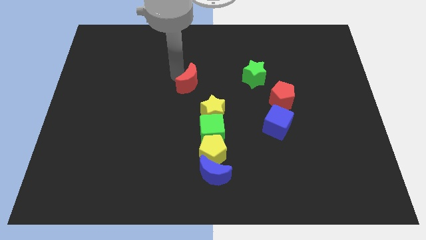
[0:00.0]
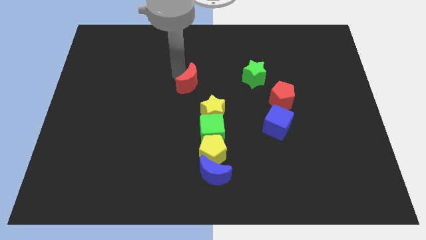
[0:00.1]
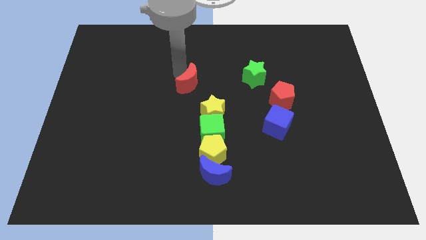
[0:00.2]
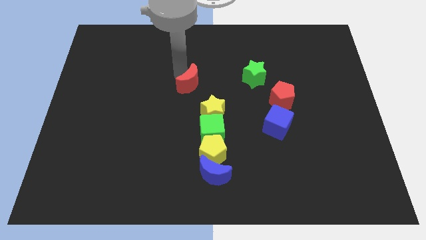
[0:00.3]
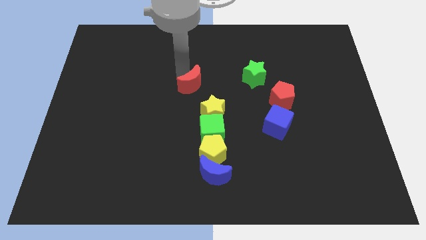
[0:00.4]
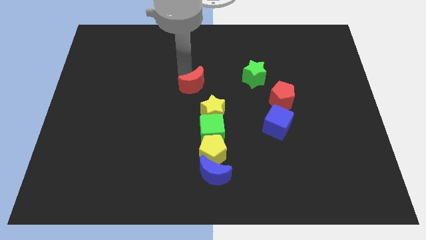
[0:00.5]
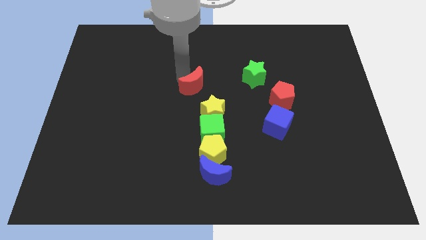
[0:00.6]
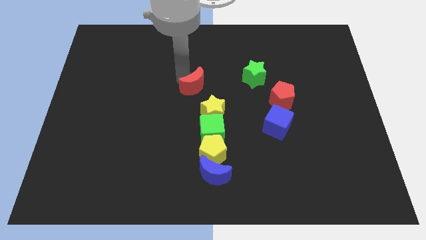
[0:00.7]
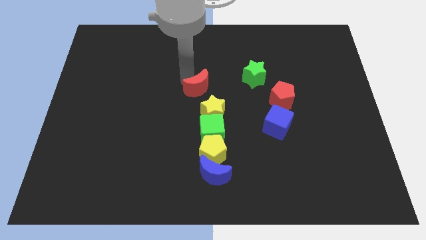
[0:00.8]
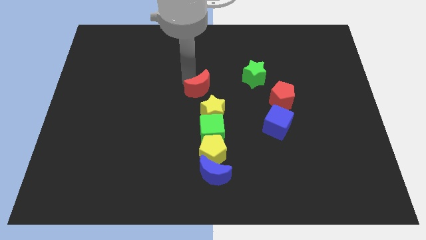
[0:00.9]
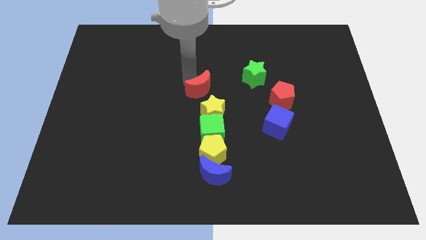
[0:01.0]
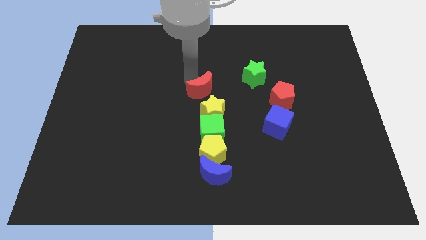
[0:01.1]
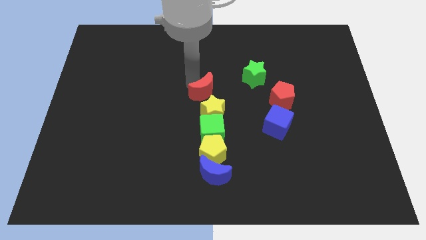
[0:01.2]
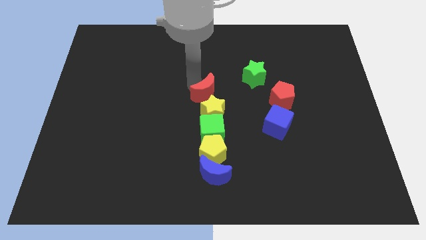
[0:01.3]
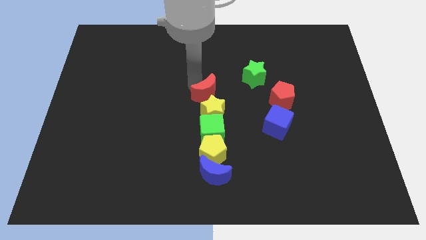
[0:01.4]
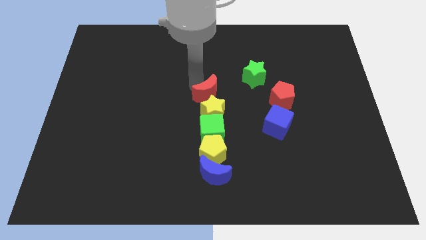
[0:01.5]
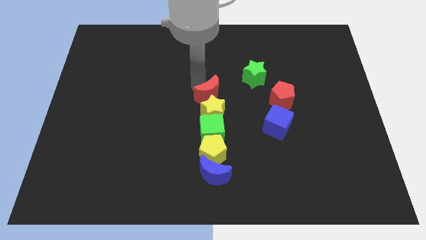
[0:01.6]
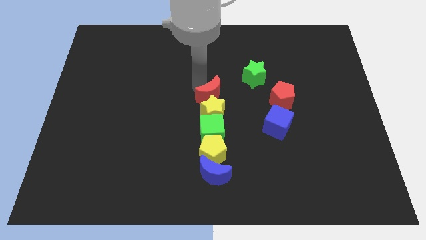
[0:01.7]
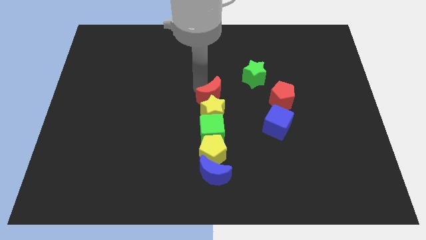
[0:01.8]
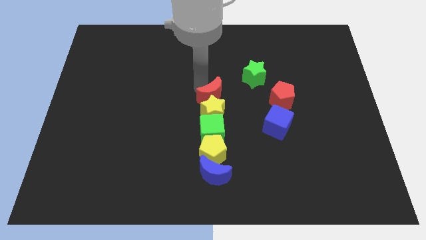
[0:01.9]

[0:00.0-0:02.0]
move the red moon into the yellwo star

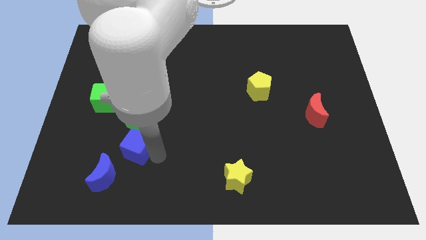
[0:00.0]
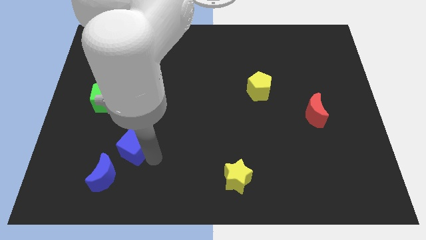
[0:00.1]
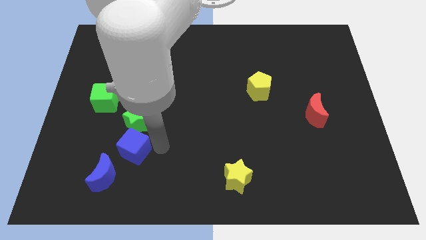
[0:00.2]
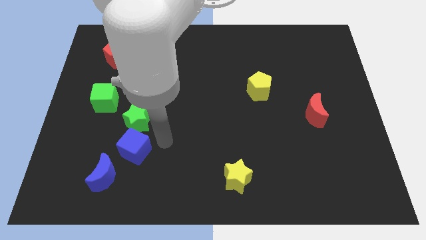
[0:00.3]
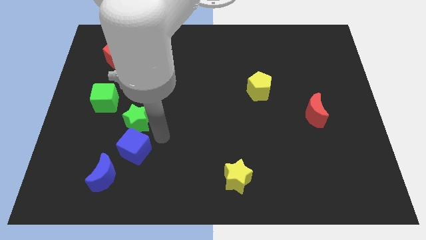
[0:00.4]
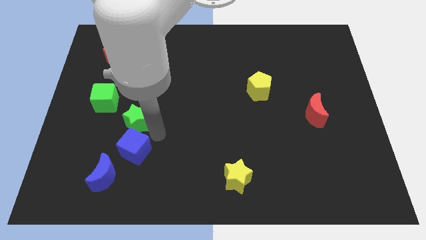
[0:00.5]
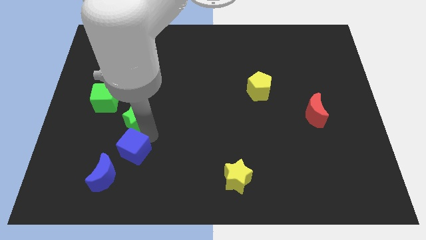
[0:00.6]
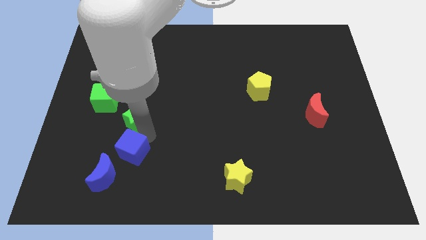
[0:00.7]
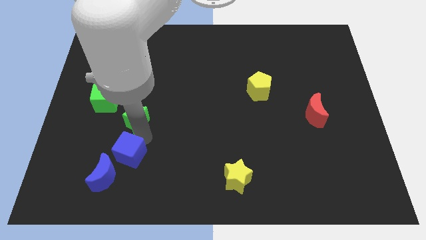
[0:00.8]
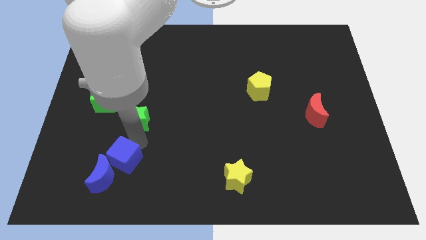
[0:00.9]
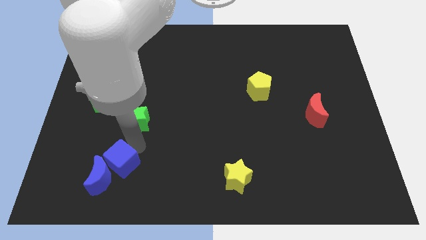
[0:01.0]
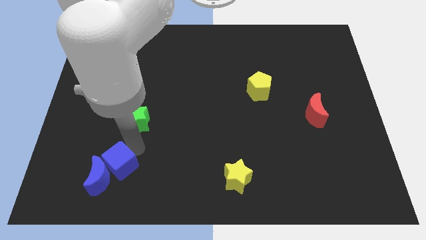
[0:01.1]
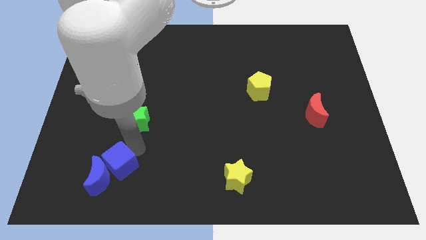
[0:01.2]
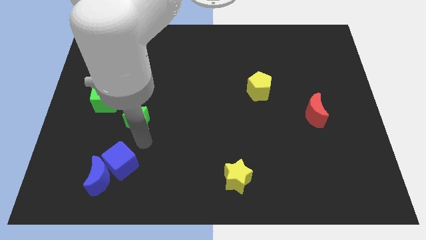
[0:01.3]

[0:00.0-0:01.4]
push the blue cube into the blue moon

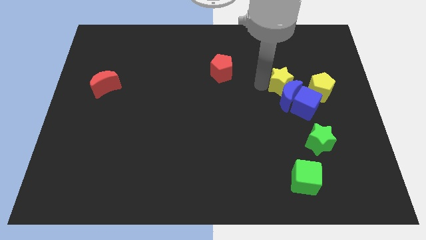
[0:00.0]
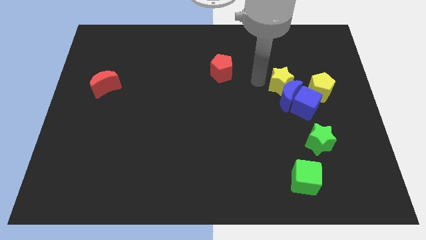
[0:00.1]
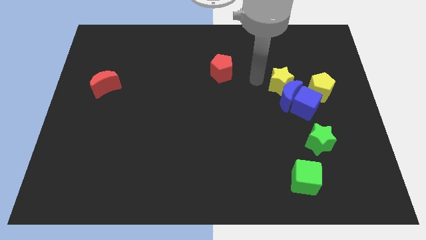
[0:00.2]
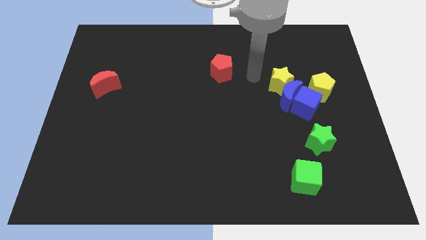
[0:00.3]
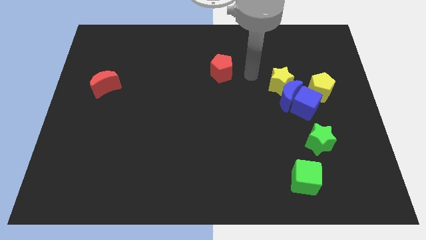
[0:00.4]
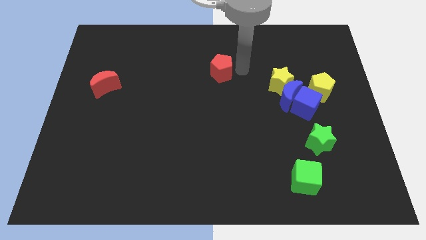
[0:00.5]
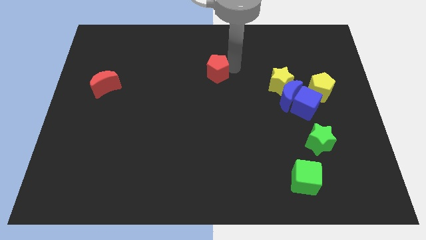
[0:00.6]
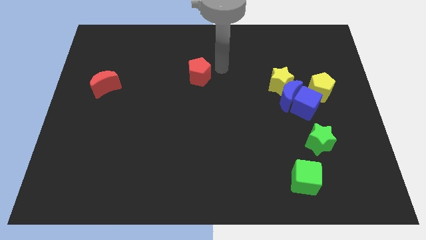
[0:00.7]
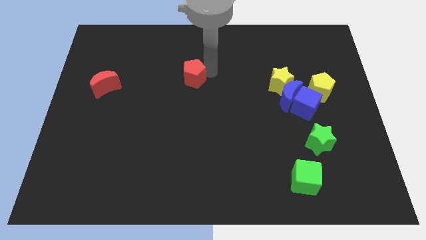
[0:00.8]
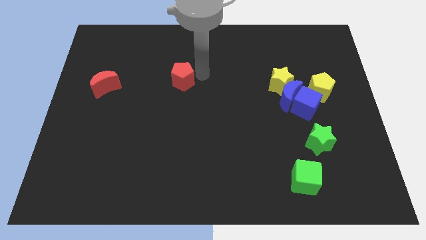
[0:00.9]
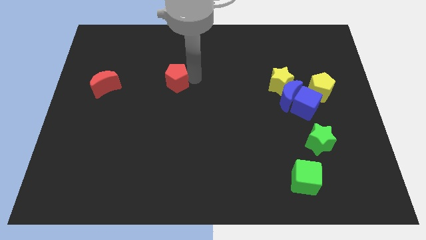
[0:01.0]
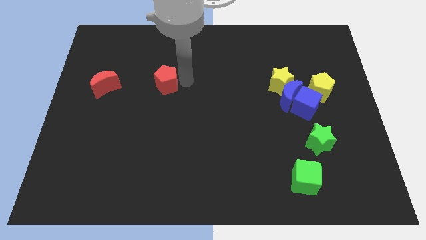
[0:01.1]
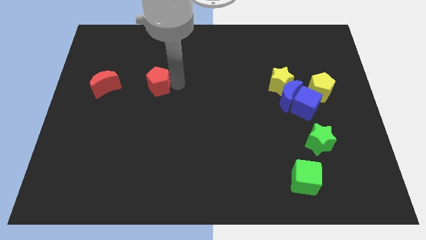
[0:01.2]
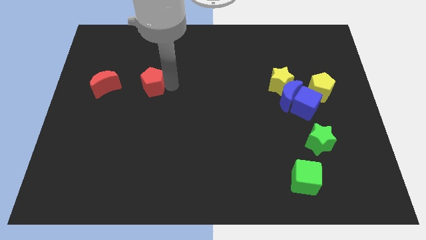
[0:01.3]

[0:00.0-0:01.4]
move the red pentagon right to the red moon

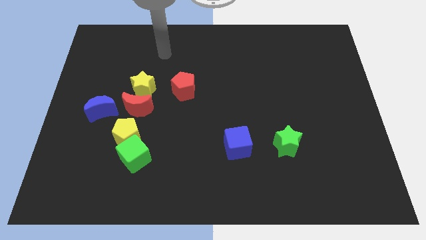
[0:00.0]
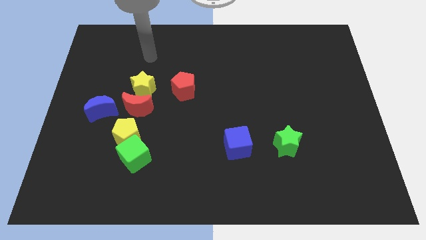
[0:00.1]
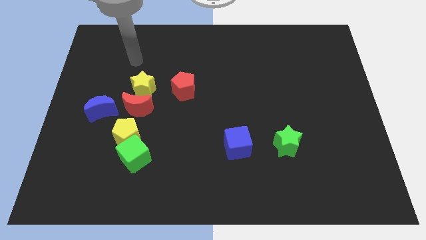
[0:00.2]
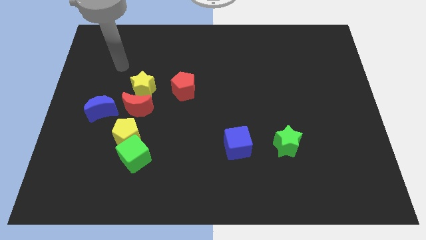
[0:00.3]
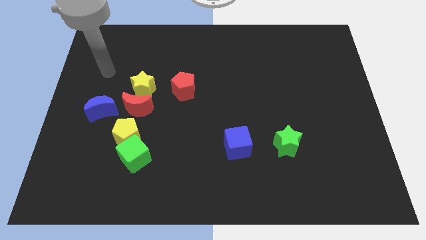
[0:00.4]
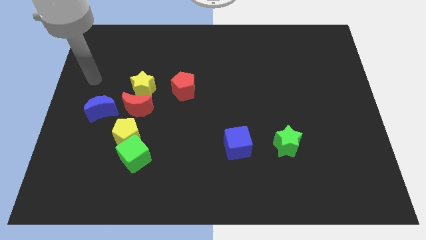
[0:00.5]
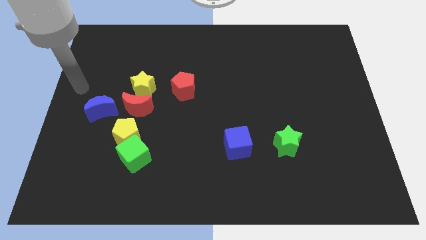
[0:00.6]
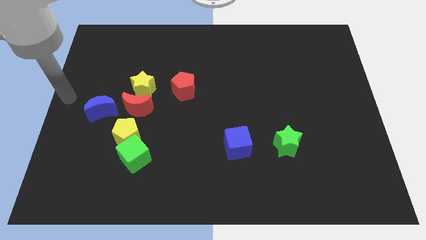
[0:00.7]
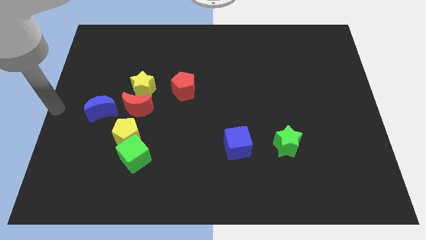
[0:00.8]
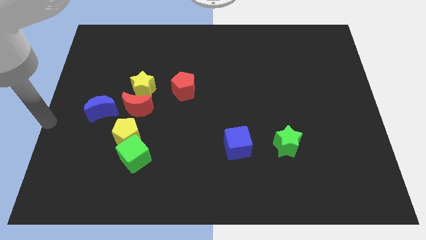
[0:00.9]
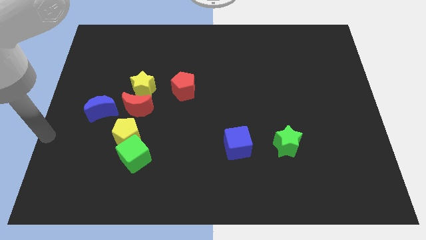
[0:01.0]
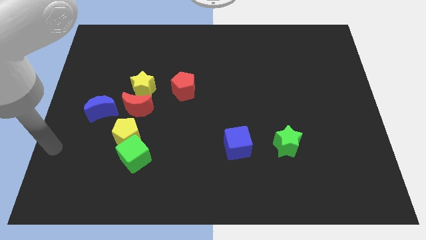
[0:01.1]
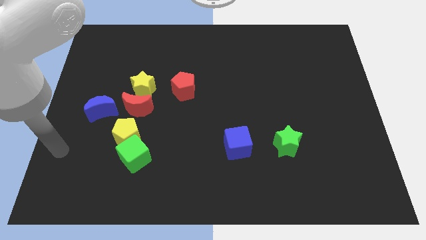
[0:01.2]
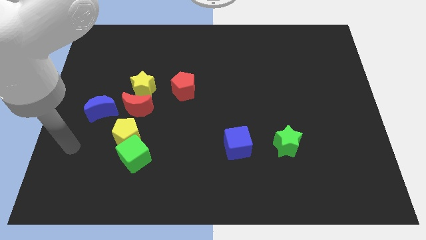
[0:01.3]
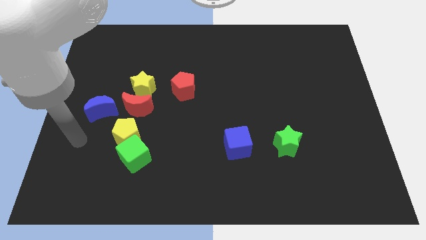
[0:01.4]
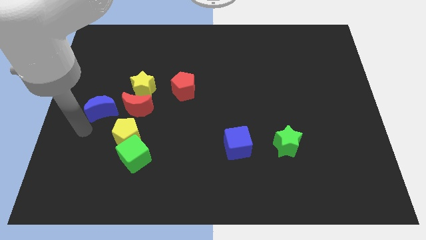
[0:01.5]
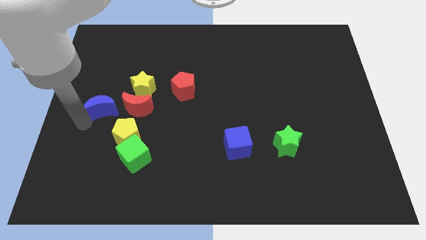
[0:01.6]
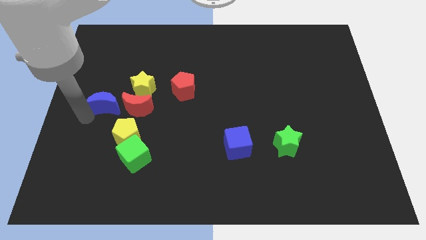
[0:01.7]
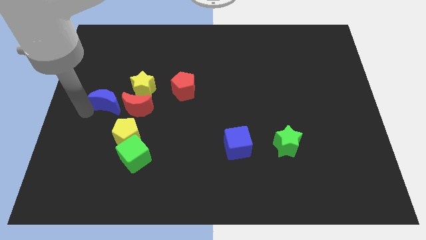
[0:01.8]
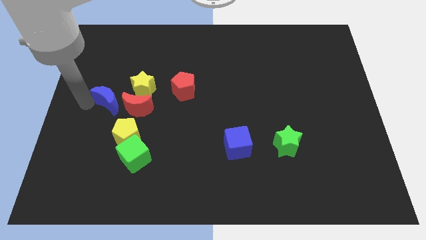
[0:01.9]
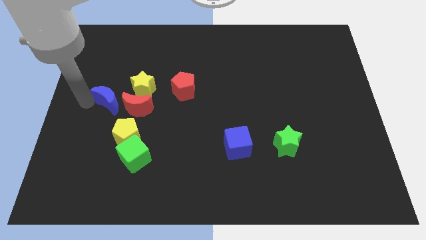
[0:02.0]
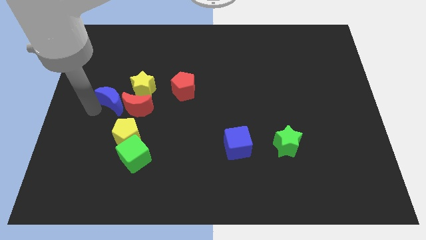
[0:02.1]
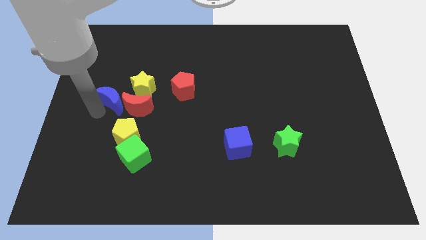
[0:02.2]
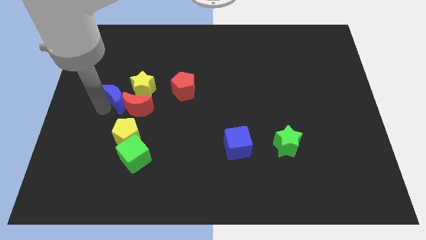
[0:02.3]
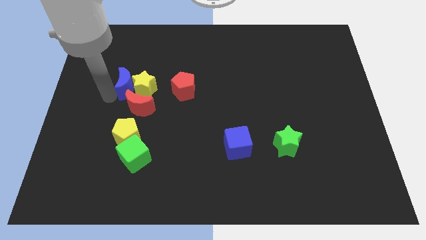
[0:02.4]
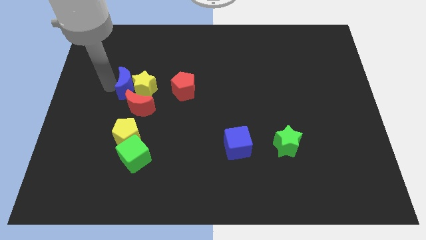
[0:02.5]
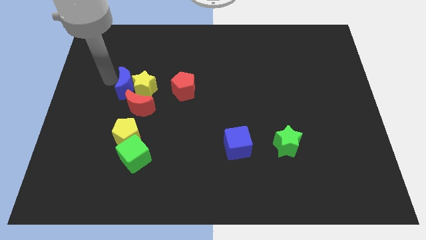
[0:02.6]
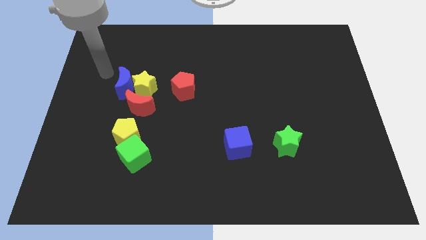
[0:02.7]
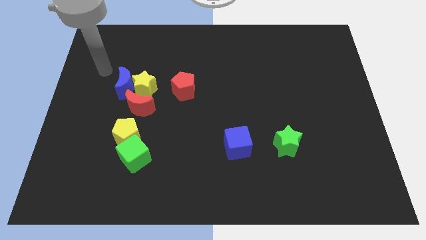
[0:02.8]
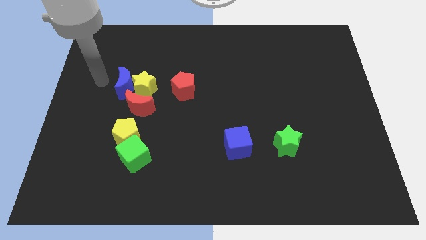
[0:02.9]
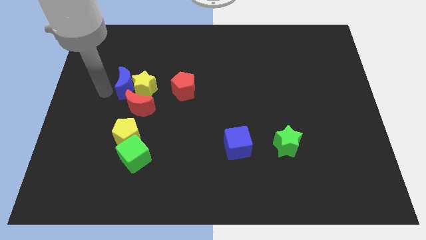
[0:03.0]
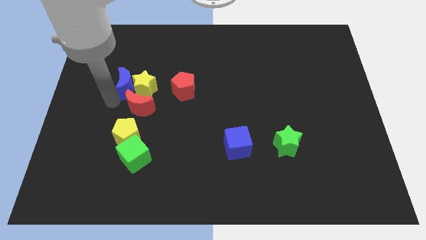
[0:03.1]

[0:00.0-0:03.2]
move blue moon towards yellow star

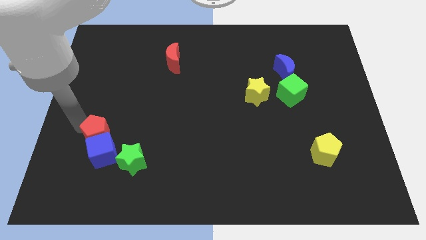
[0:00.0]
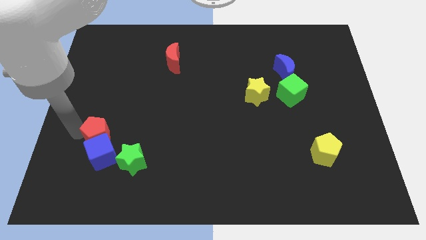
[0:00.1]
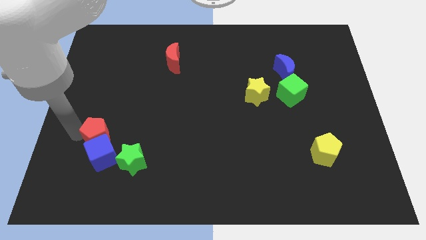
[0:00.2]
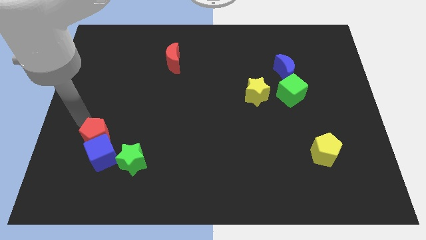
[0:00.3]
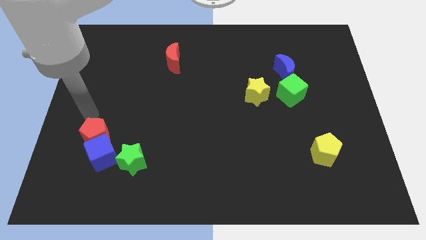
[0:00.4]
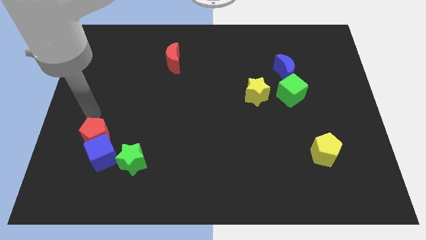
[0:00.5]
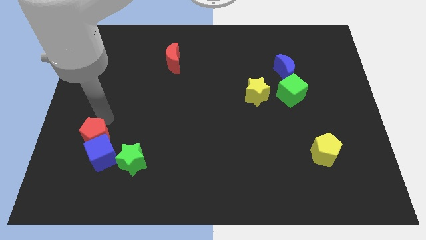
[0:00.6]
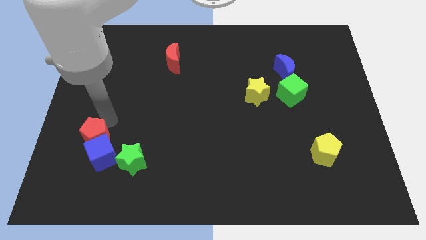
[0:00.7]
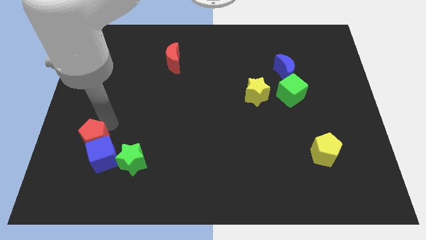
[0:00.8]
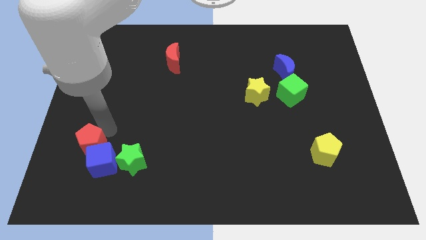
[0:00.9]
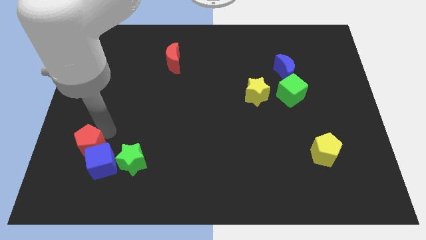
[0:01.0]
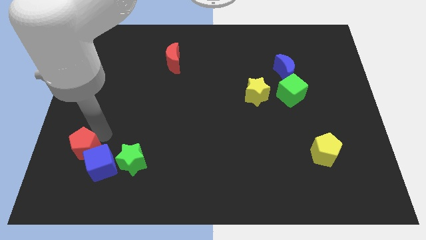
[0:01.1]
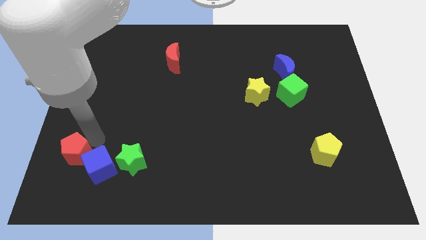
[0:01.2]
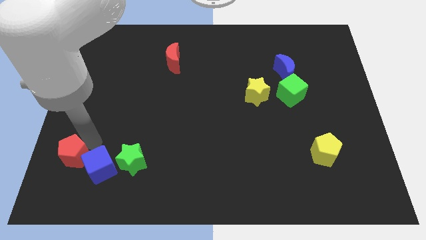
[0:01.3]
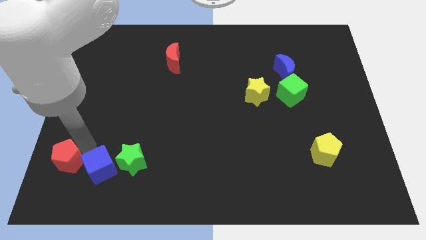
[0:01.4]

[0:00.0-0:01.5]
push the red pentagon and blue cube towards the bottom left side of the board
